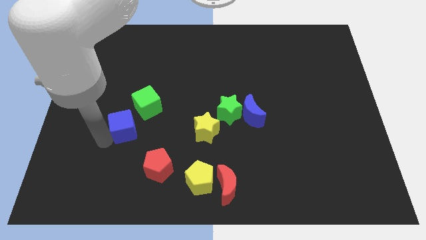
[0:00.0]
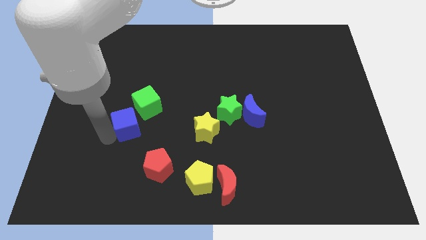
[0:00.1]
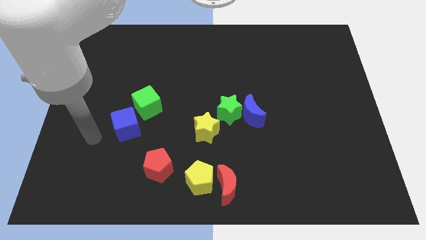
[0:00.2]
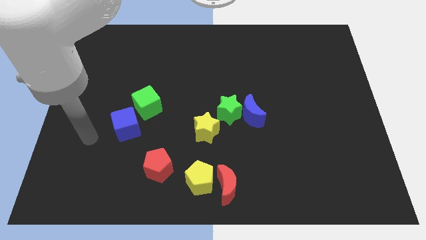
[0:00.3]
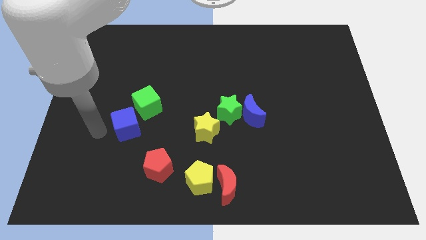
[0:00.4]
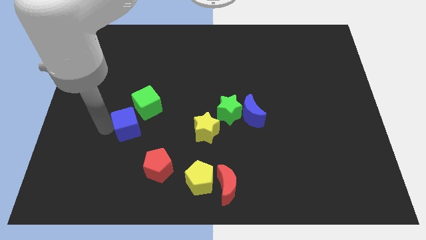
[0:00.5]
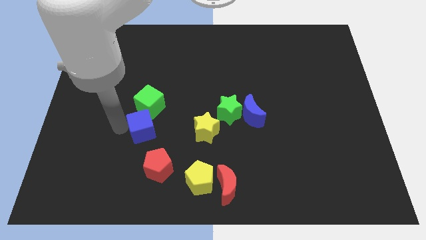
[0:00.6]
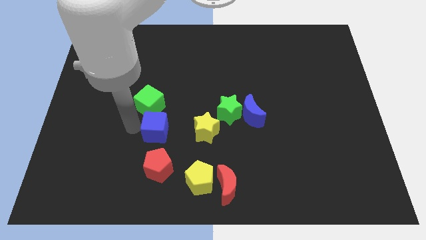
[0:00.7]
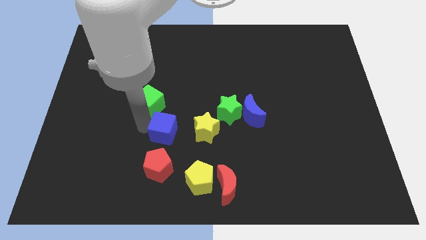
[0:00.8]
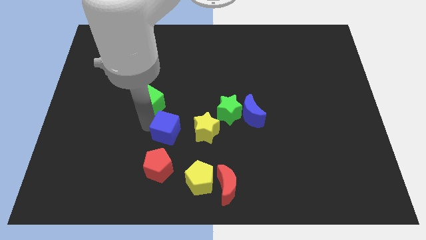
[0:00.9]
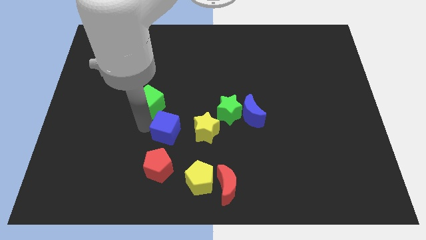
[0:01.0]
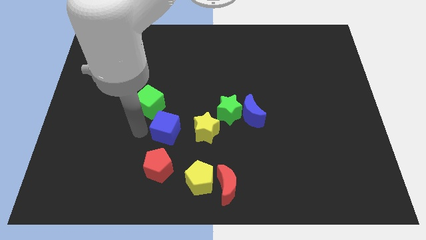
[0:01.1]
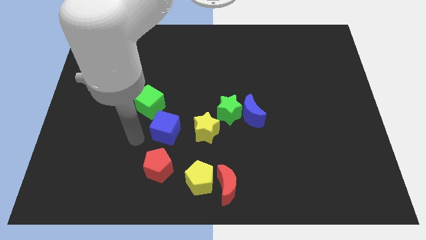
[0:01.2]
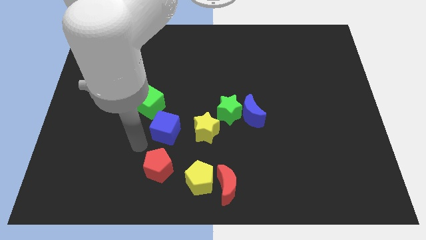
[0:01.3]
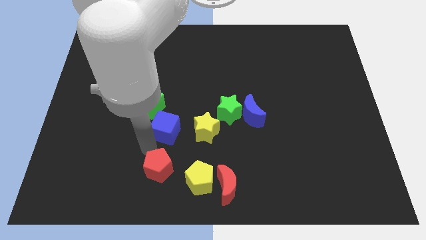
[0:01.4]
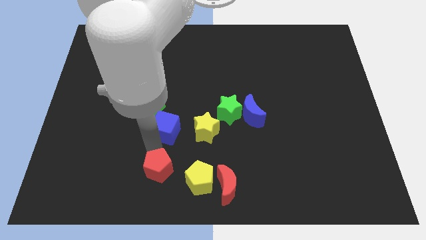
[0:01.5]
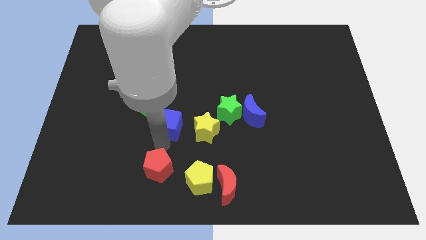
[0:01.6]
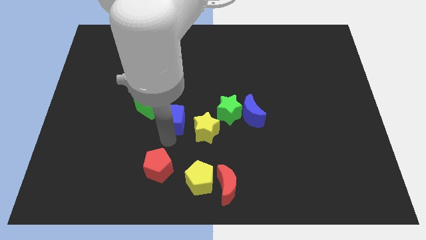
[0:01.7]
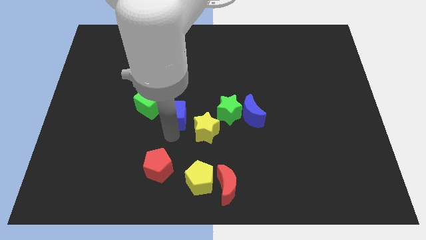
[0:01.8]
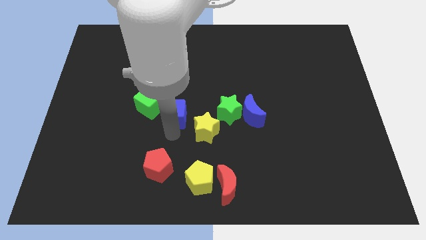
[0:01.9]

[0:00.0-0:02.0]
place the blue cube in between green cube and yellow star

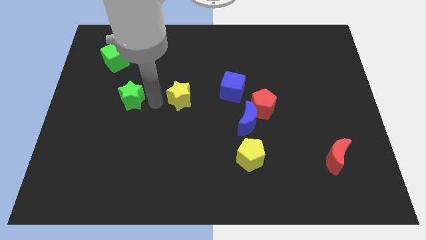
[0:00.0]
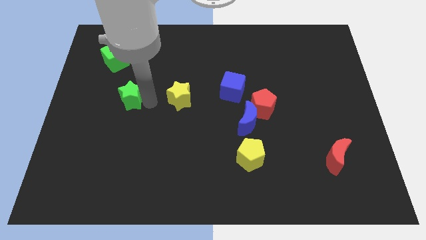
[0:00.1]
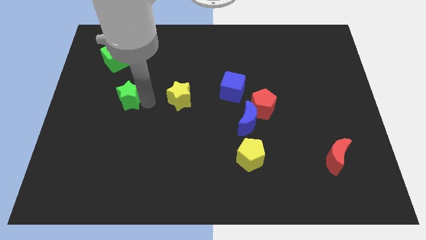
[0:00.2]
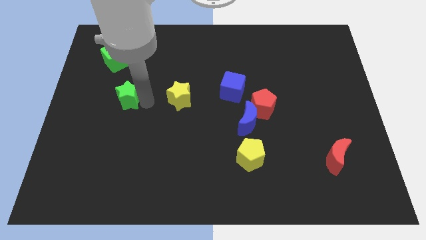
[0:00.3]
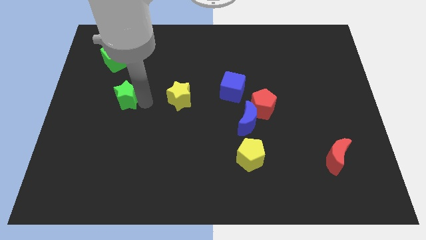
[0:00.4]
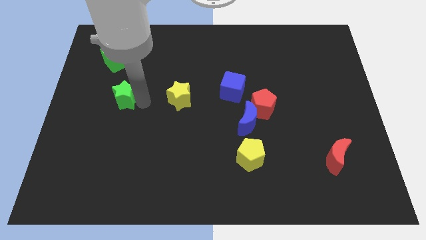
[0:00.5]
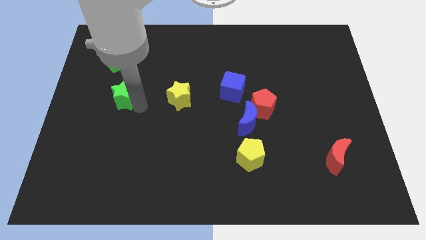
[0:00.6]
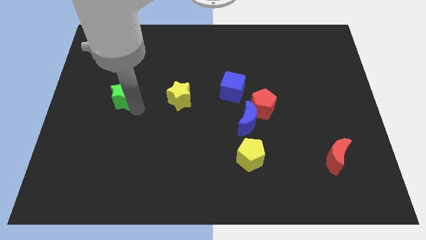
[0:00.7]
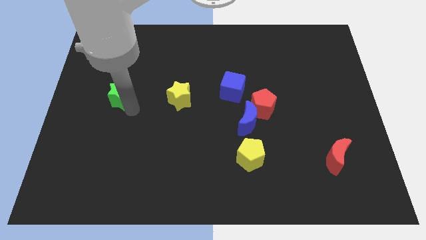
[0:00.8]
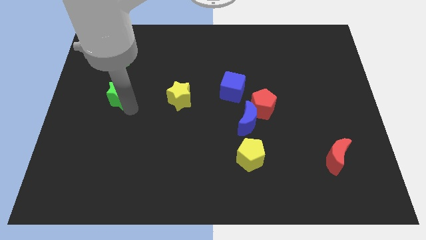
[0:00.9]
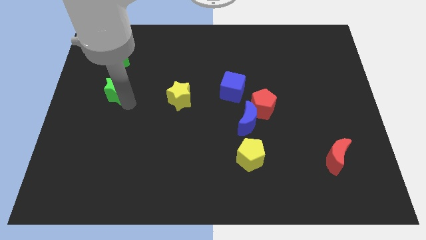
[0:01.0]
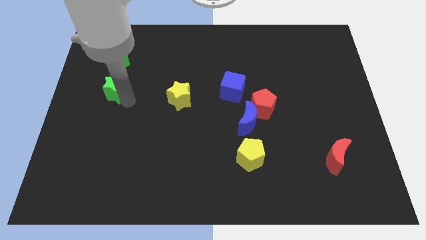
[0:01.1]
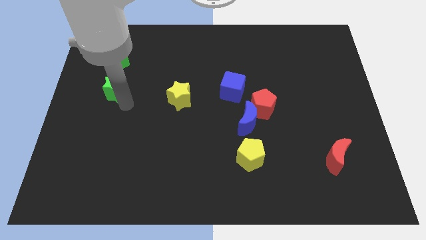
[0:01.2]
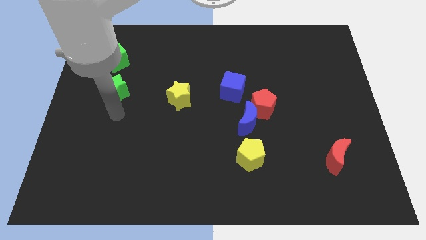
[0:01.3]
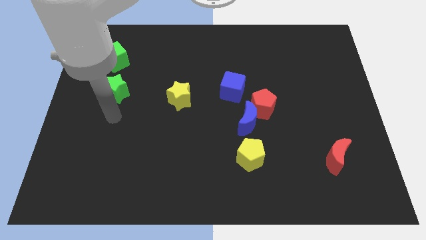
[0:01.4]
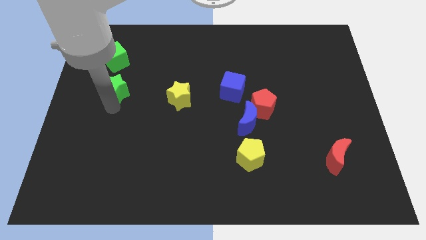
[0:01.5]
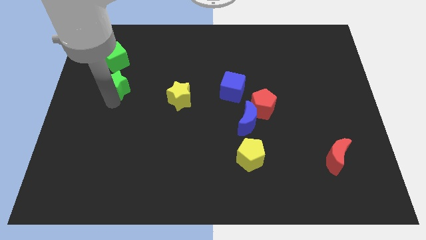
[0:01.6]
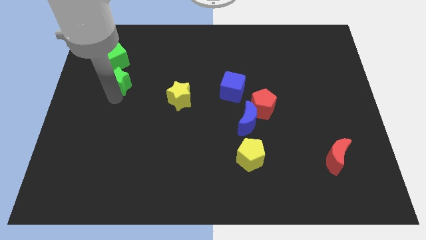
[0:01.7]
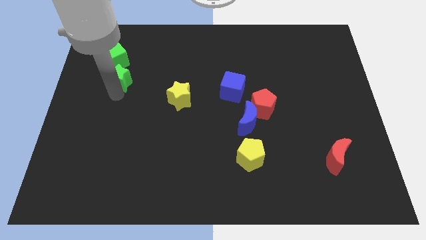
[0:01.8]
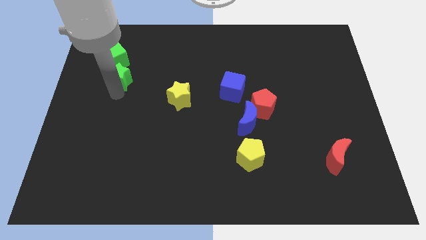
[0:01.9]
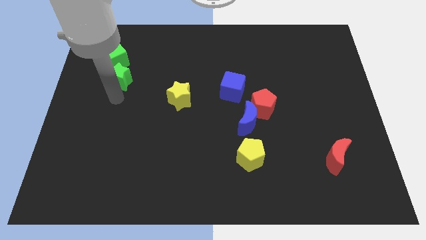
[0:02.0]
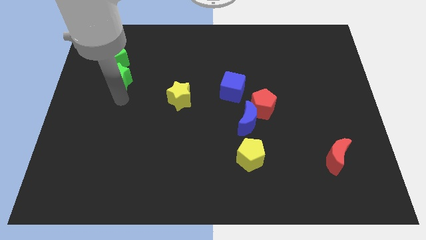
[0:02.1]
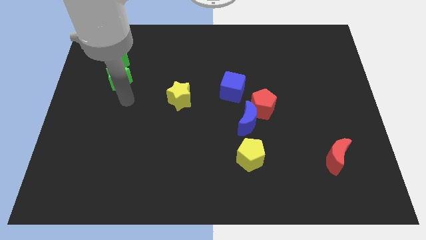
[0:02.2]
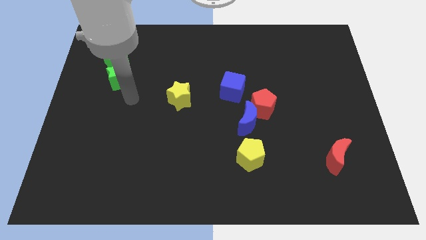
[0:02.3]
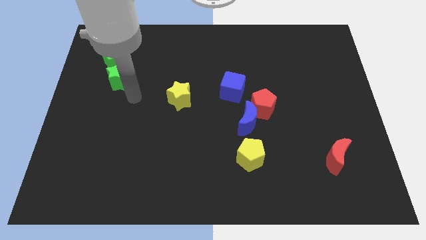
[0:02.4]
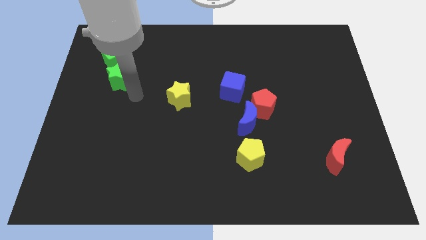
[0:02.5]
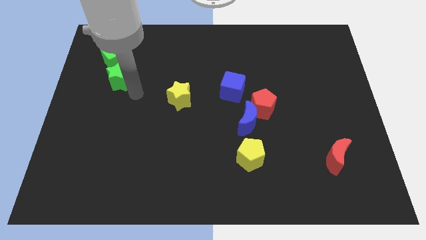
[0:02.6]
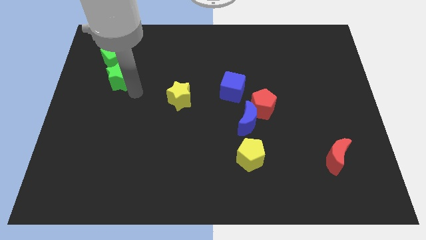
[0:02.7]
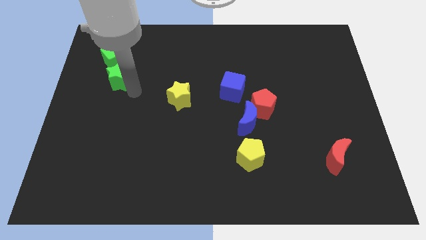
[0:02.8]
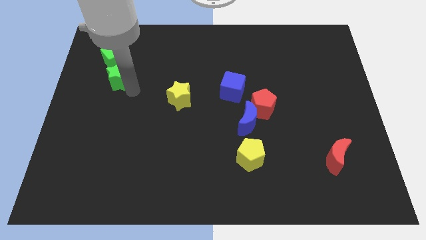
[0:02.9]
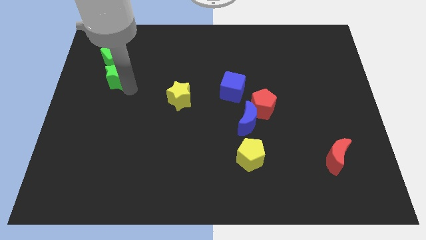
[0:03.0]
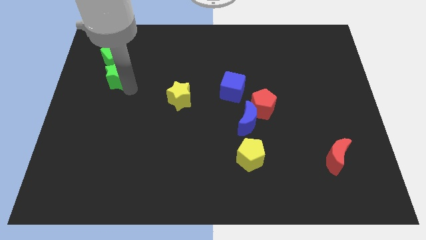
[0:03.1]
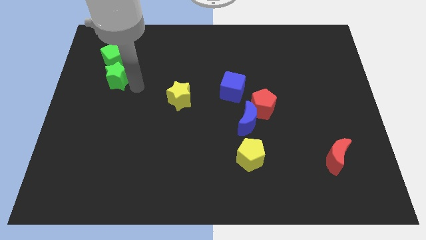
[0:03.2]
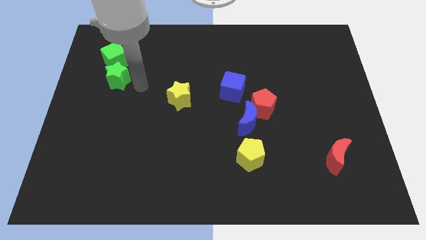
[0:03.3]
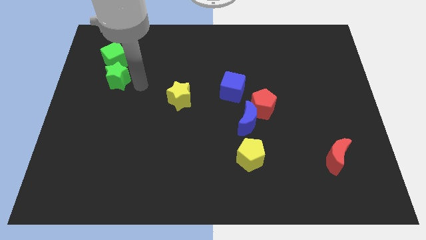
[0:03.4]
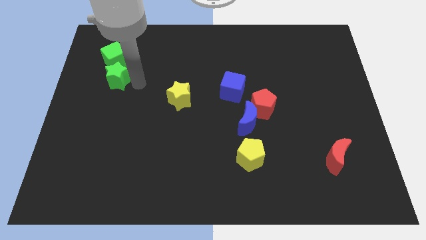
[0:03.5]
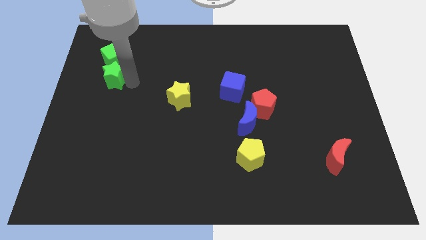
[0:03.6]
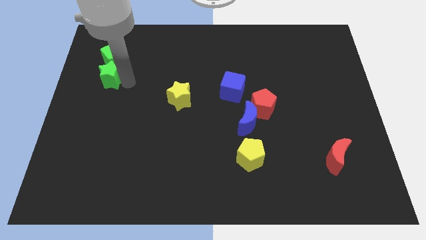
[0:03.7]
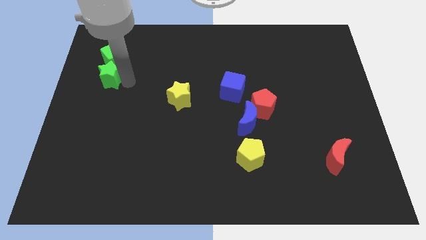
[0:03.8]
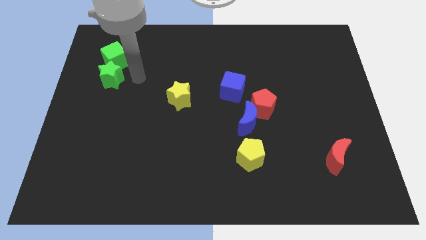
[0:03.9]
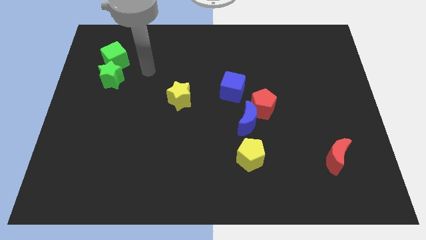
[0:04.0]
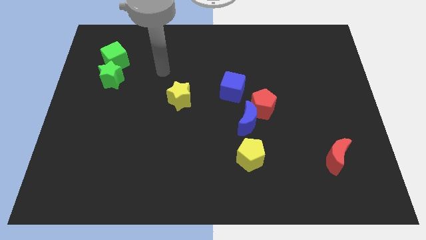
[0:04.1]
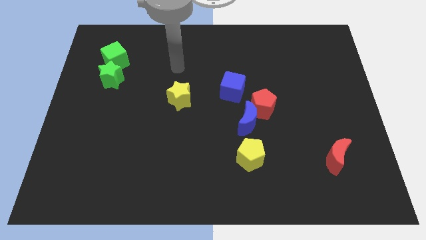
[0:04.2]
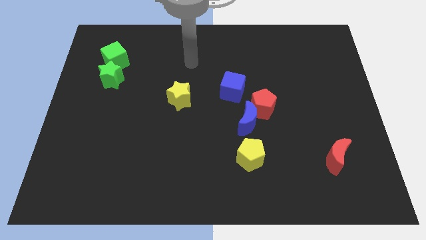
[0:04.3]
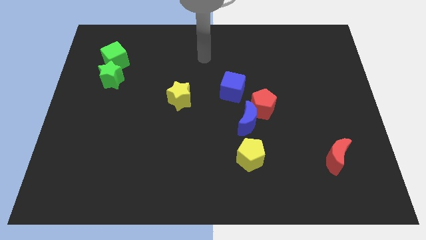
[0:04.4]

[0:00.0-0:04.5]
move green star to the bottom of green cube

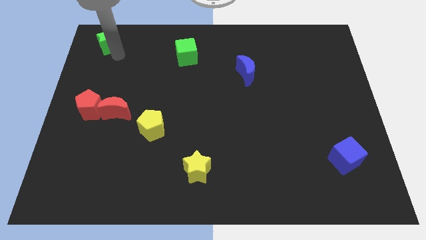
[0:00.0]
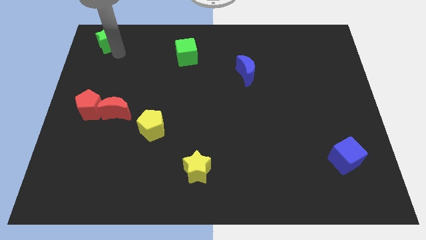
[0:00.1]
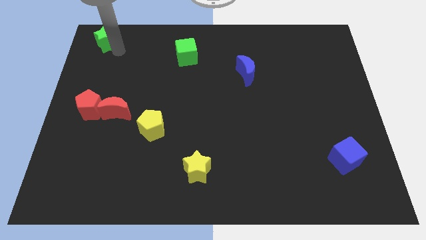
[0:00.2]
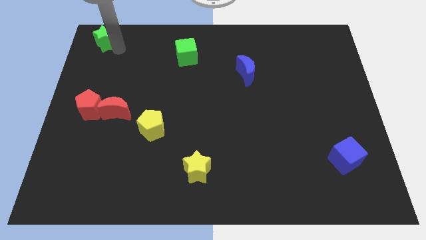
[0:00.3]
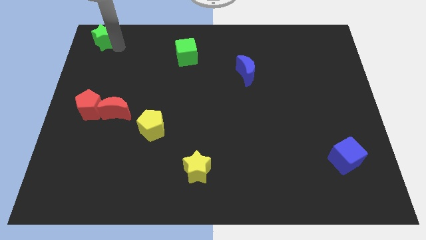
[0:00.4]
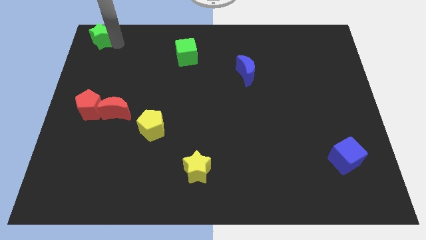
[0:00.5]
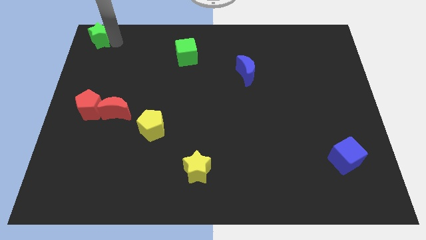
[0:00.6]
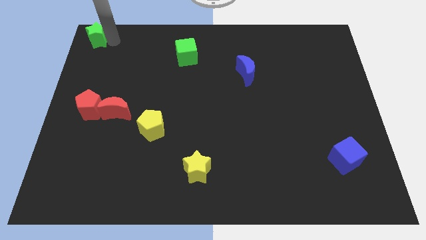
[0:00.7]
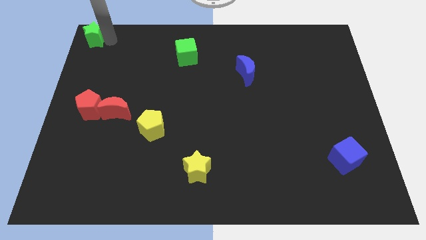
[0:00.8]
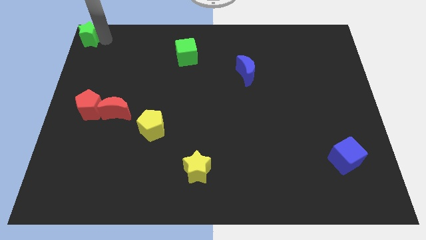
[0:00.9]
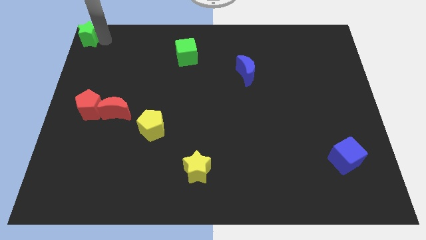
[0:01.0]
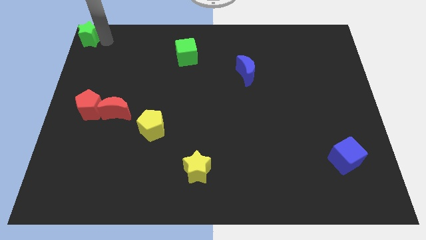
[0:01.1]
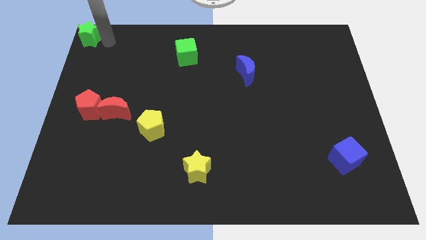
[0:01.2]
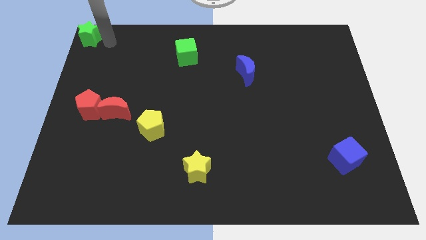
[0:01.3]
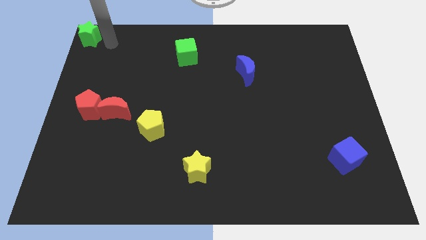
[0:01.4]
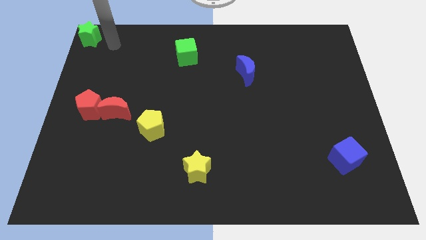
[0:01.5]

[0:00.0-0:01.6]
move the green star towards the top left corner of the board

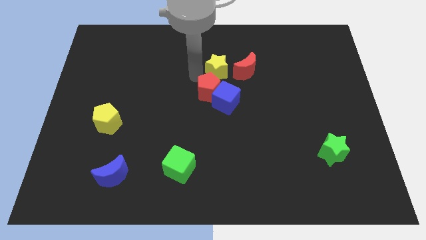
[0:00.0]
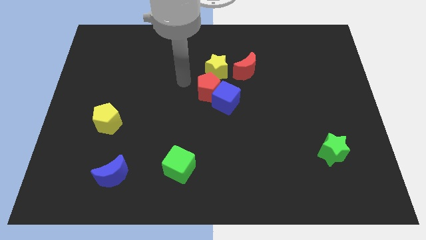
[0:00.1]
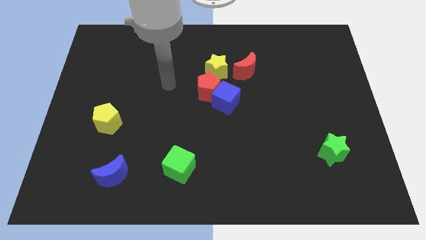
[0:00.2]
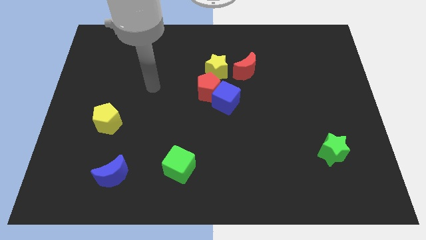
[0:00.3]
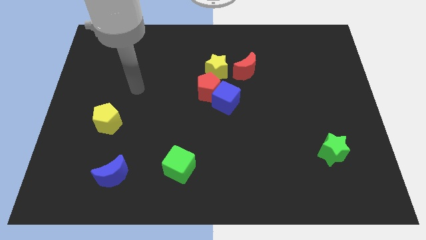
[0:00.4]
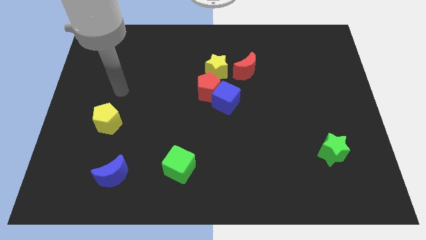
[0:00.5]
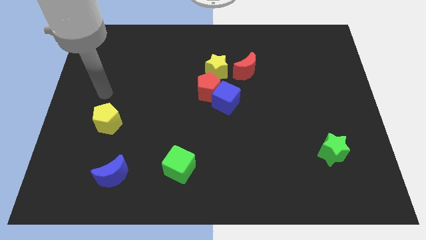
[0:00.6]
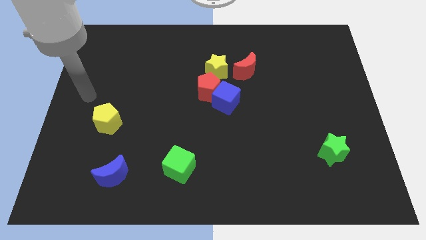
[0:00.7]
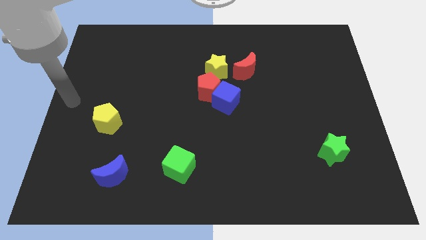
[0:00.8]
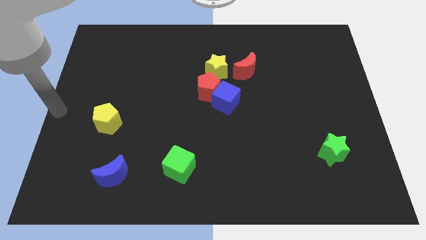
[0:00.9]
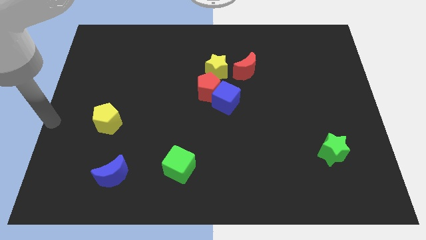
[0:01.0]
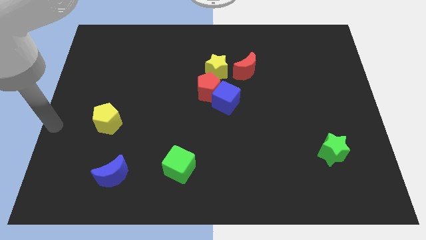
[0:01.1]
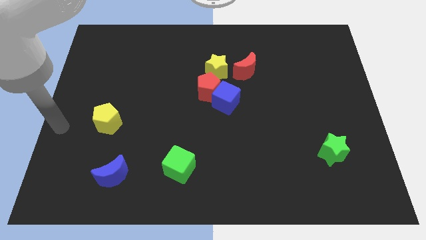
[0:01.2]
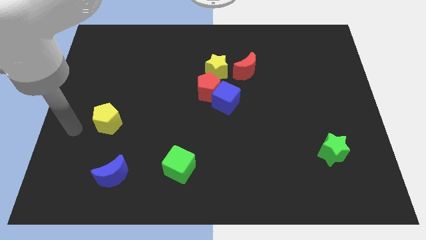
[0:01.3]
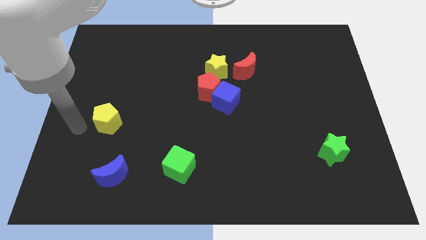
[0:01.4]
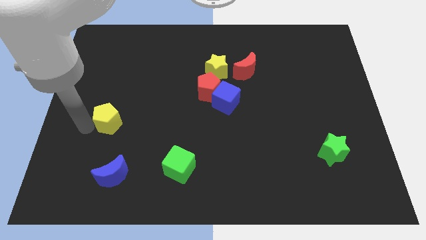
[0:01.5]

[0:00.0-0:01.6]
place your arm to the left of the yellow pentagon
